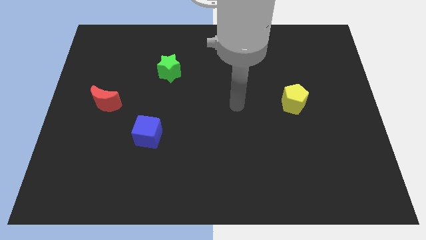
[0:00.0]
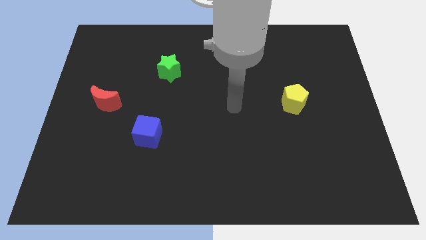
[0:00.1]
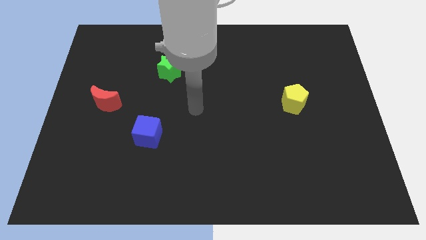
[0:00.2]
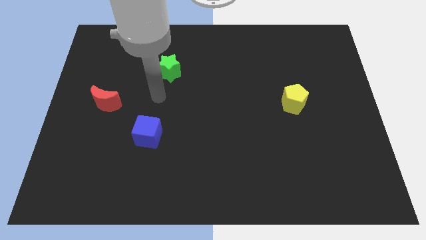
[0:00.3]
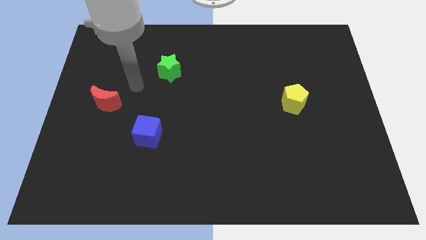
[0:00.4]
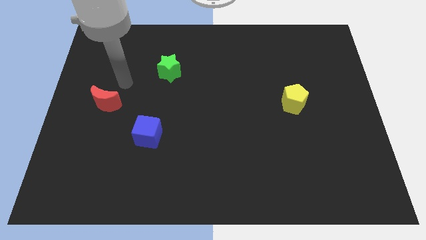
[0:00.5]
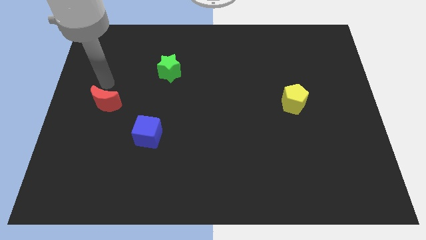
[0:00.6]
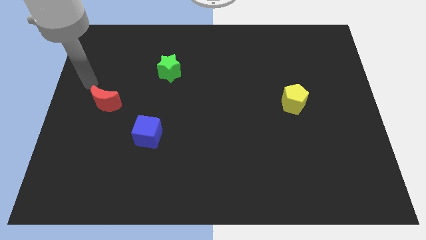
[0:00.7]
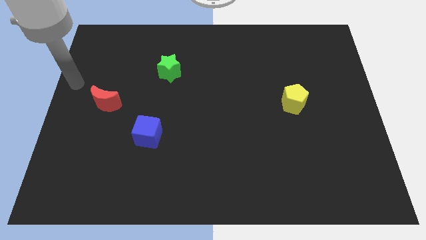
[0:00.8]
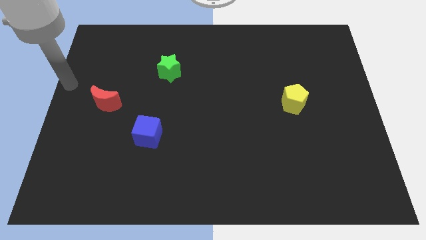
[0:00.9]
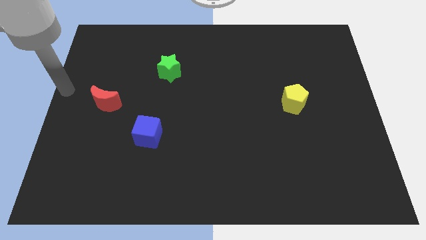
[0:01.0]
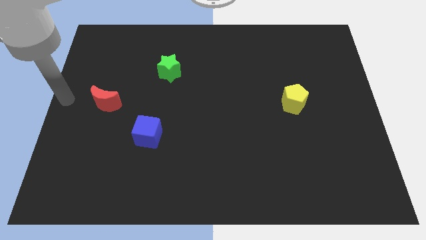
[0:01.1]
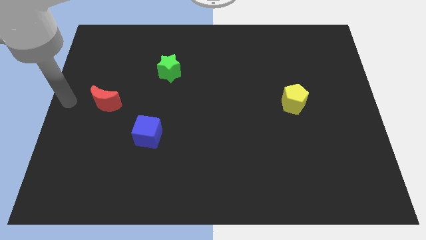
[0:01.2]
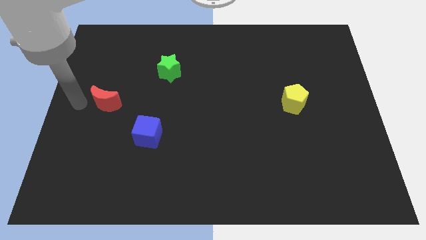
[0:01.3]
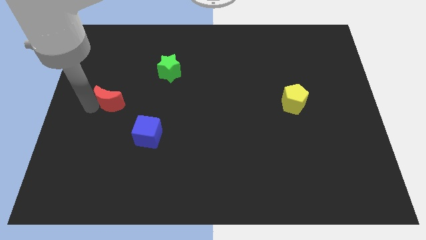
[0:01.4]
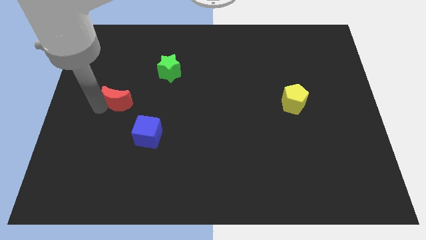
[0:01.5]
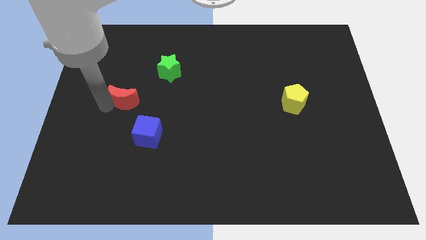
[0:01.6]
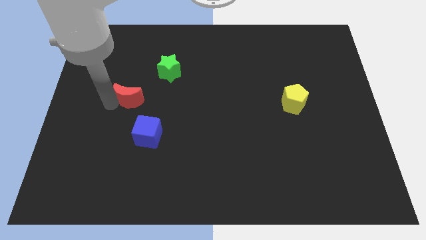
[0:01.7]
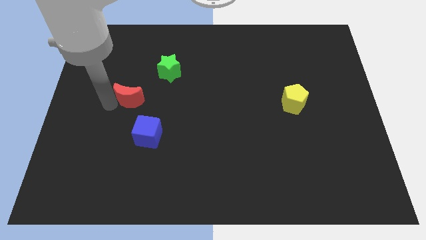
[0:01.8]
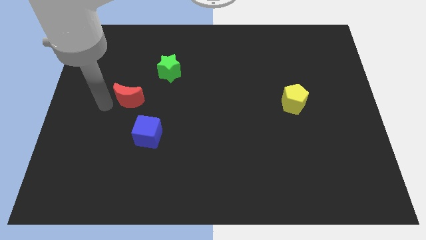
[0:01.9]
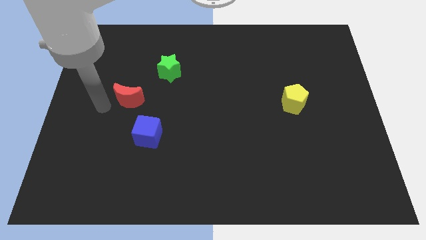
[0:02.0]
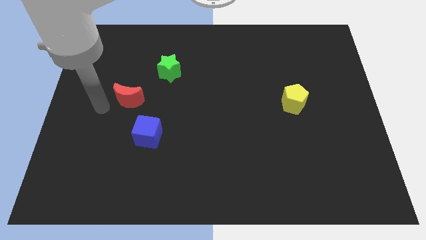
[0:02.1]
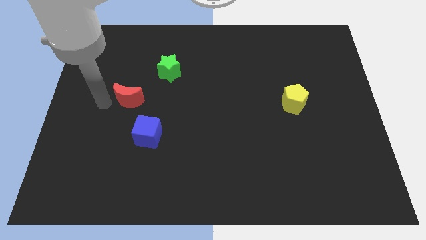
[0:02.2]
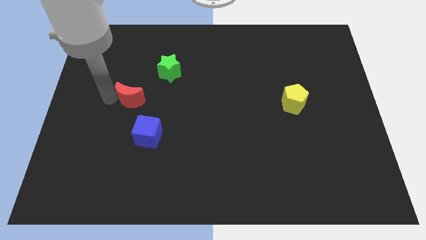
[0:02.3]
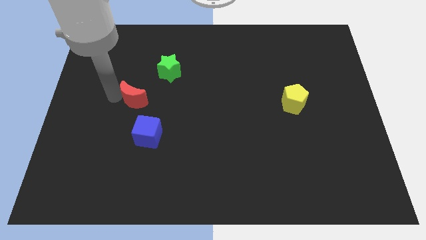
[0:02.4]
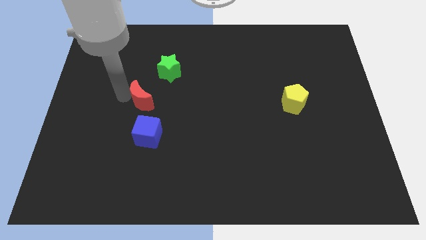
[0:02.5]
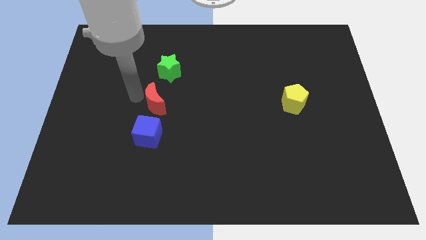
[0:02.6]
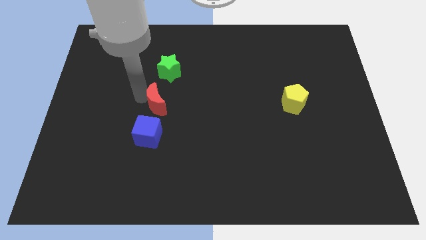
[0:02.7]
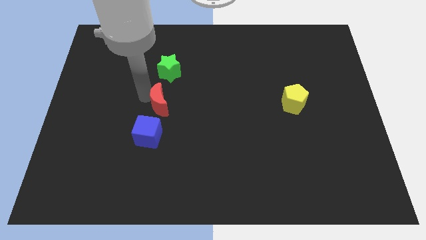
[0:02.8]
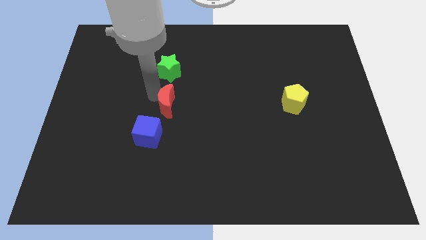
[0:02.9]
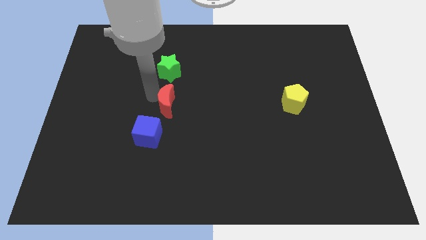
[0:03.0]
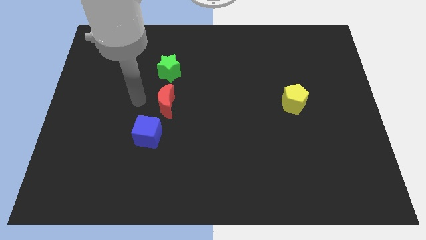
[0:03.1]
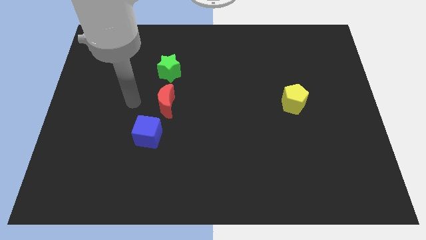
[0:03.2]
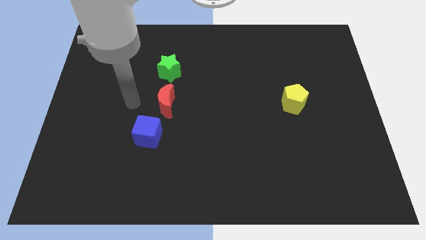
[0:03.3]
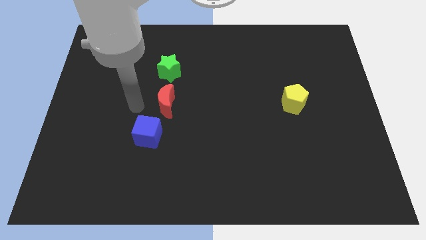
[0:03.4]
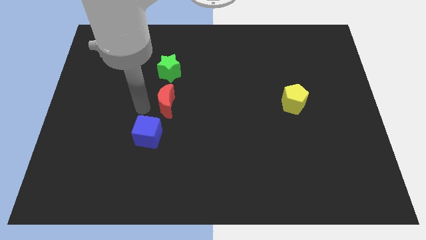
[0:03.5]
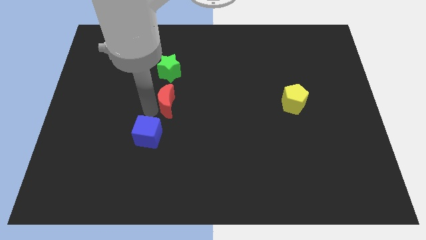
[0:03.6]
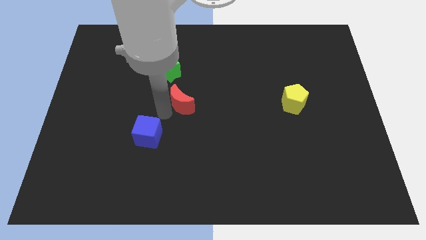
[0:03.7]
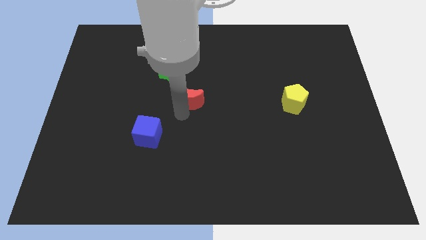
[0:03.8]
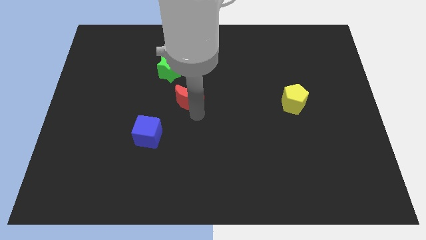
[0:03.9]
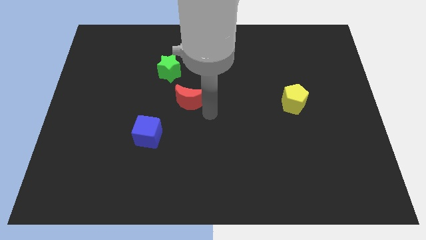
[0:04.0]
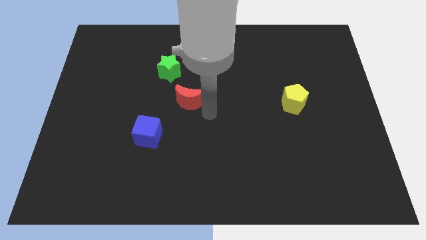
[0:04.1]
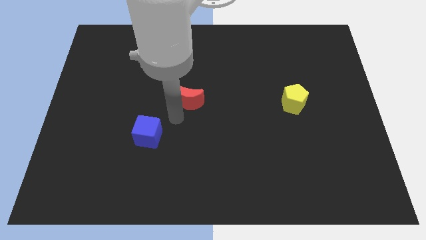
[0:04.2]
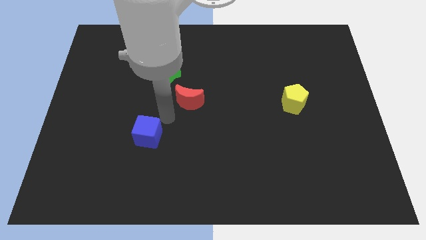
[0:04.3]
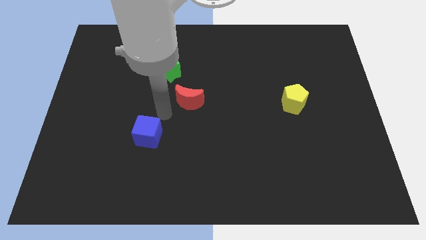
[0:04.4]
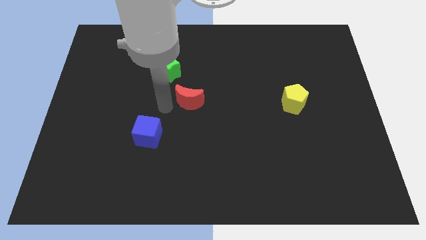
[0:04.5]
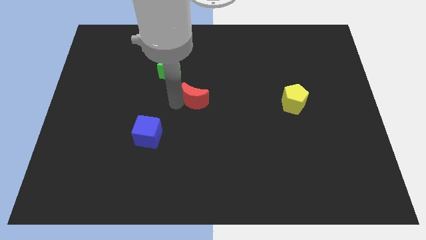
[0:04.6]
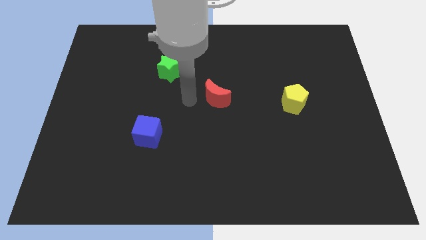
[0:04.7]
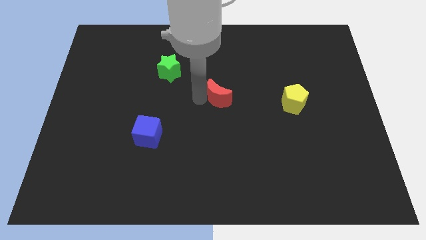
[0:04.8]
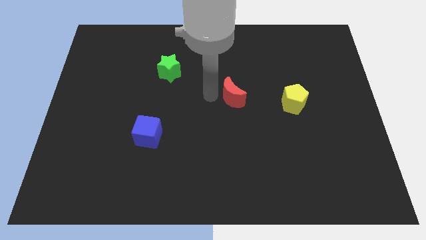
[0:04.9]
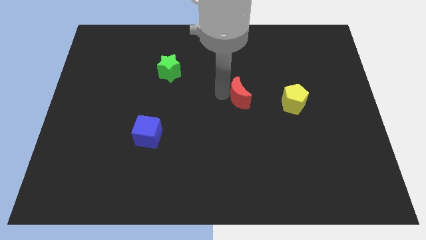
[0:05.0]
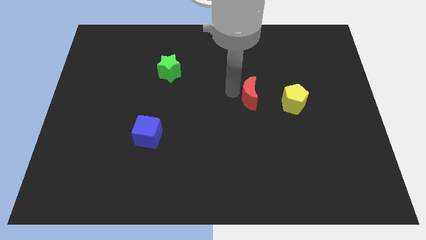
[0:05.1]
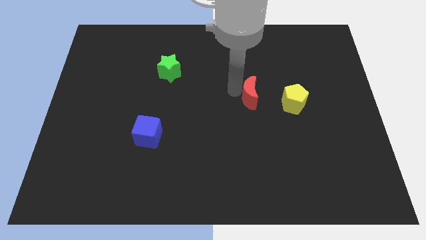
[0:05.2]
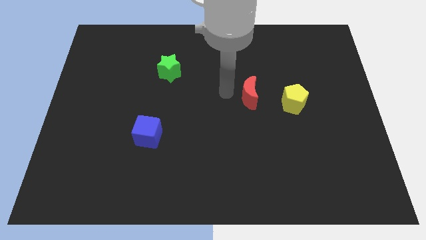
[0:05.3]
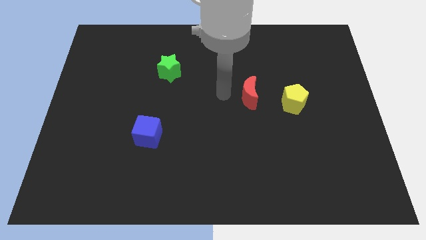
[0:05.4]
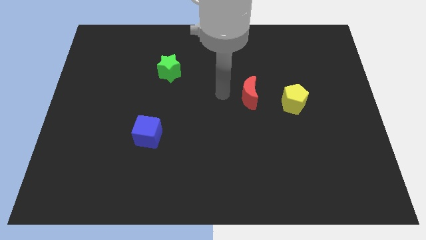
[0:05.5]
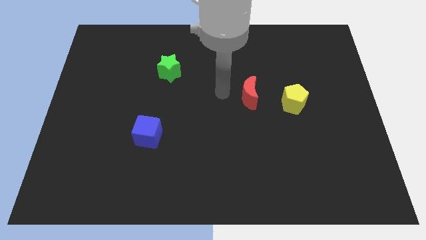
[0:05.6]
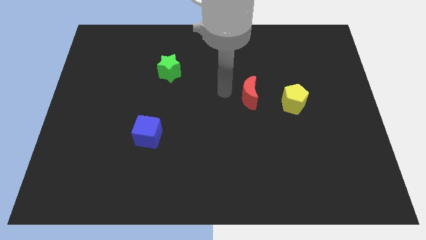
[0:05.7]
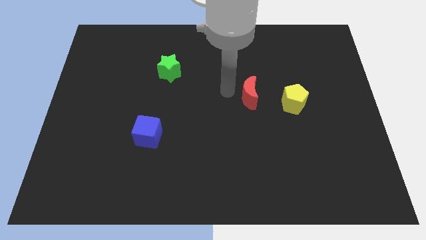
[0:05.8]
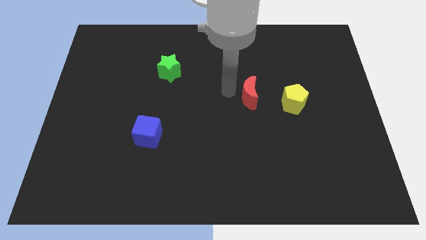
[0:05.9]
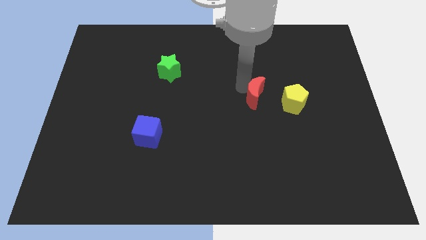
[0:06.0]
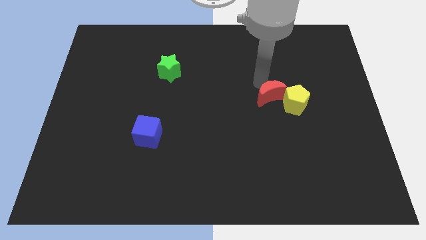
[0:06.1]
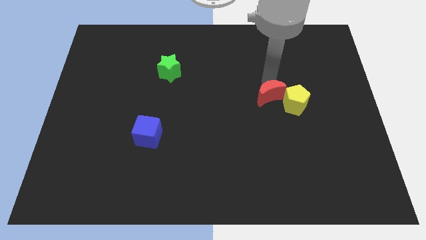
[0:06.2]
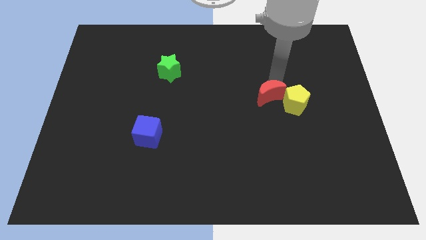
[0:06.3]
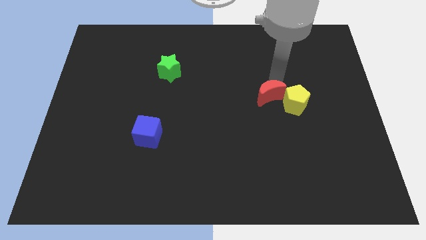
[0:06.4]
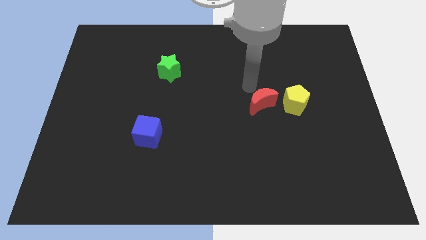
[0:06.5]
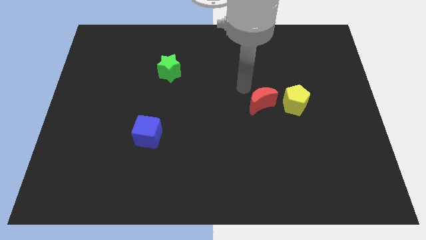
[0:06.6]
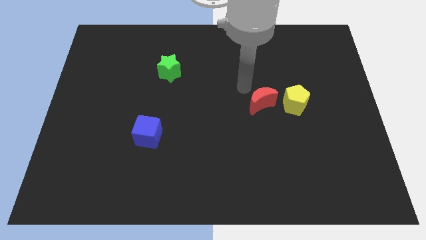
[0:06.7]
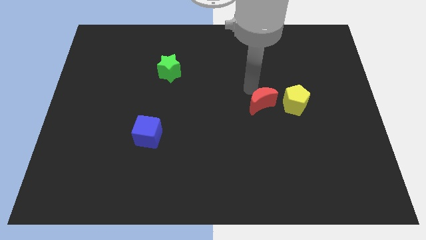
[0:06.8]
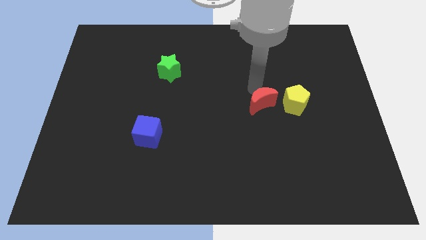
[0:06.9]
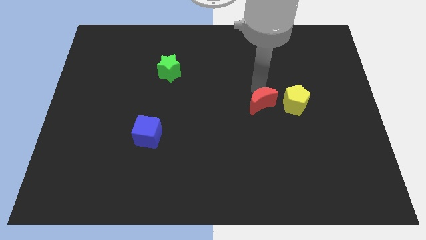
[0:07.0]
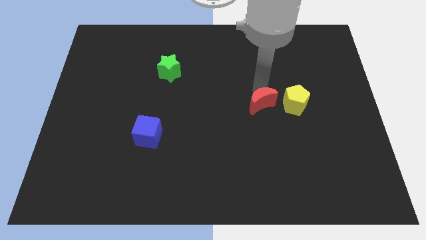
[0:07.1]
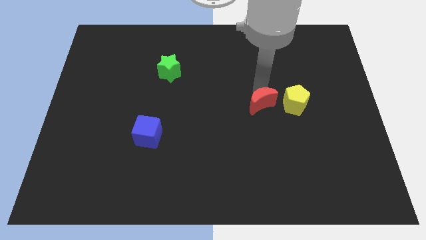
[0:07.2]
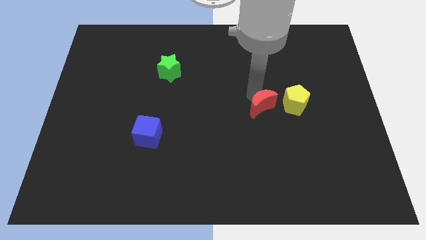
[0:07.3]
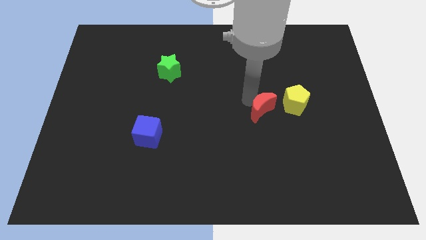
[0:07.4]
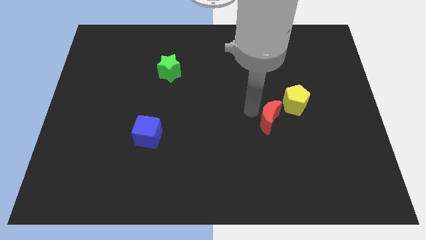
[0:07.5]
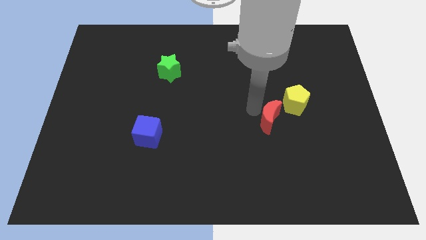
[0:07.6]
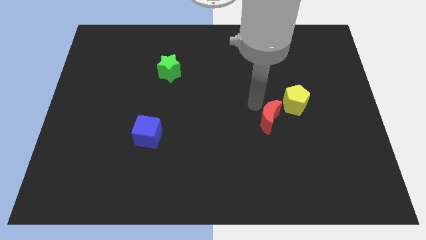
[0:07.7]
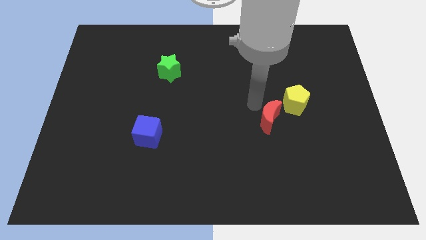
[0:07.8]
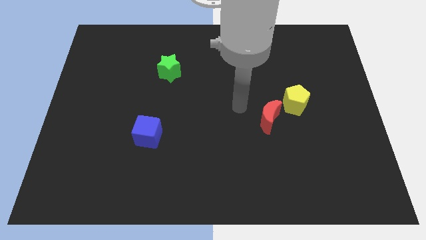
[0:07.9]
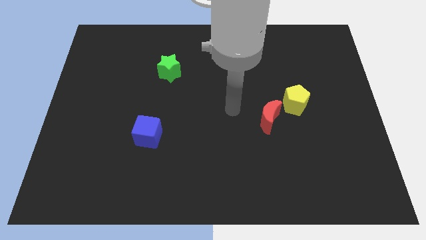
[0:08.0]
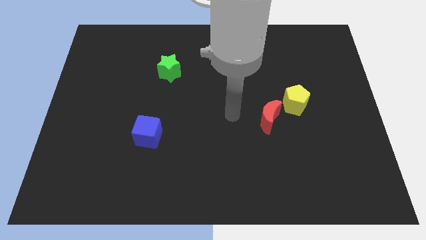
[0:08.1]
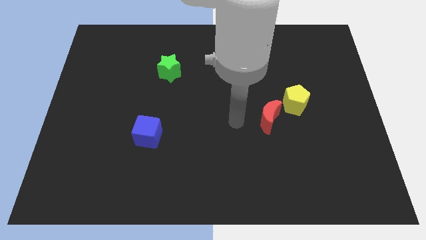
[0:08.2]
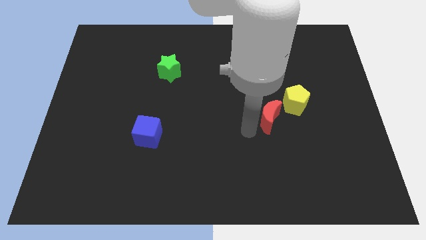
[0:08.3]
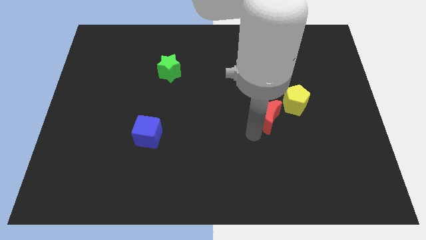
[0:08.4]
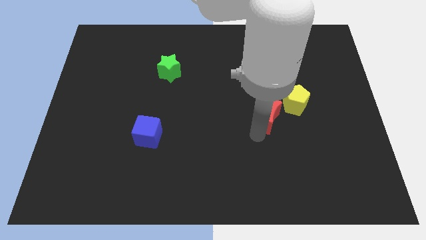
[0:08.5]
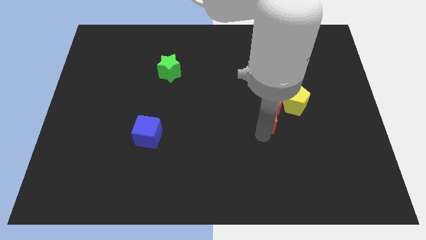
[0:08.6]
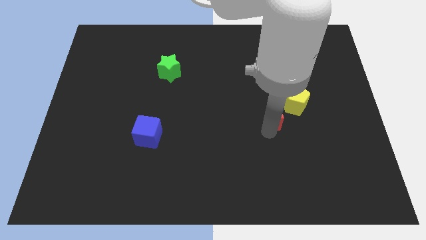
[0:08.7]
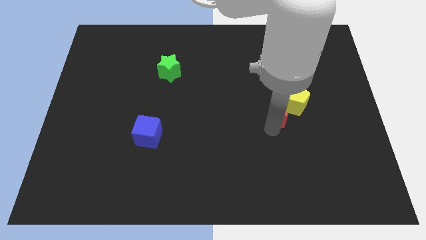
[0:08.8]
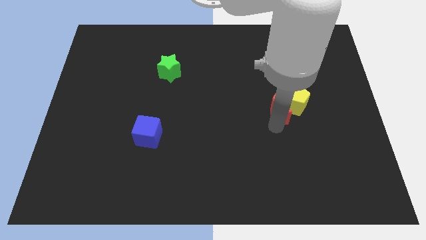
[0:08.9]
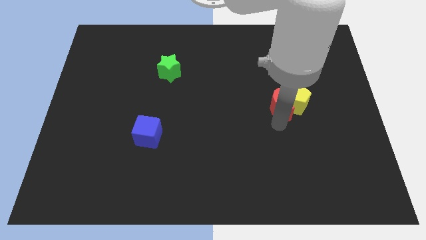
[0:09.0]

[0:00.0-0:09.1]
push the red moon close to the pentagon
